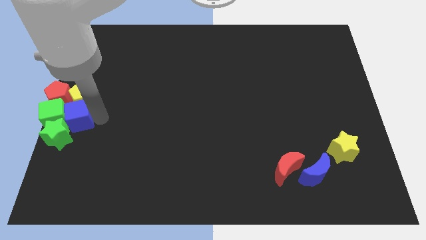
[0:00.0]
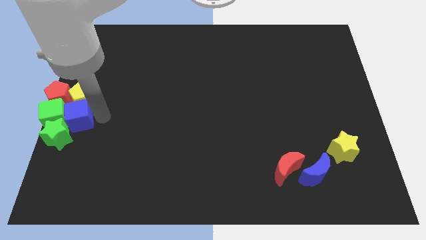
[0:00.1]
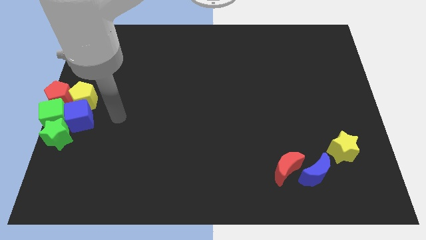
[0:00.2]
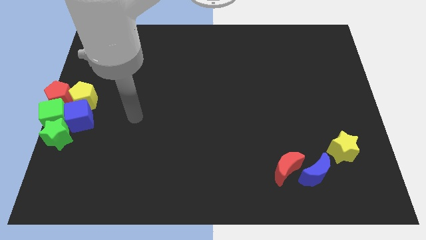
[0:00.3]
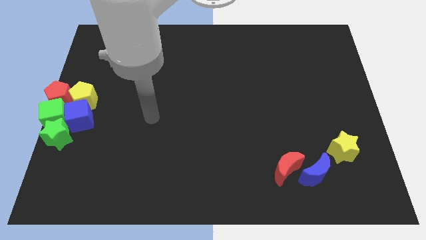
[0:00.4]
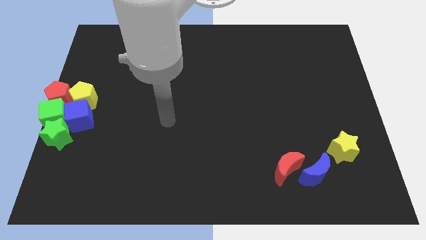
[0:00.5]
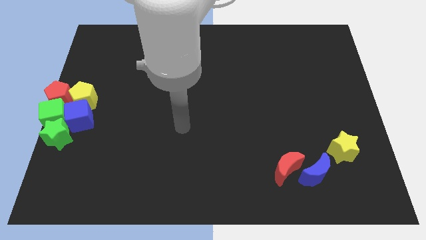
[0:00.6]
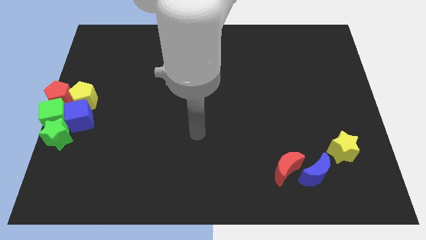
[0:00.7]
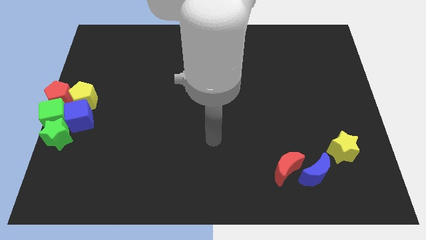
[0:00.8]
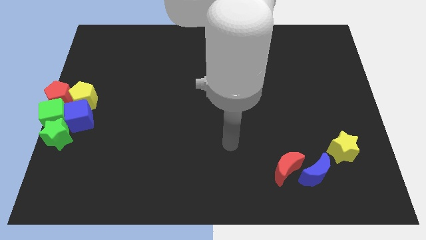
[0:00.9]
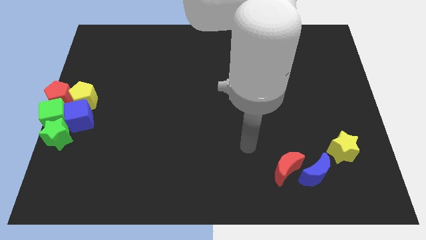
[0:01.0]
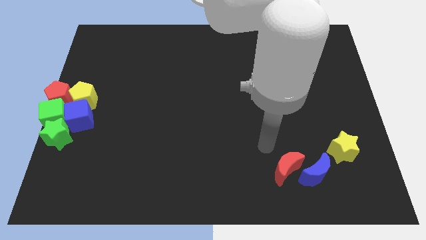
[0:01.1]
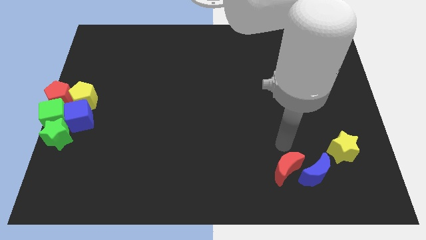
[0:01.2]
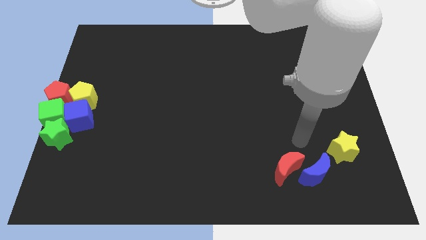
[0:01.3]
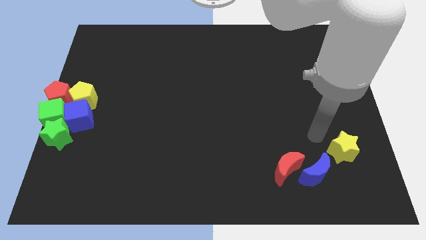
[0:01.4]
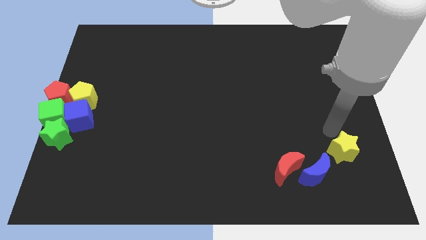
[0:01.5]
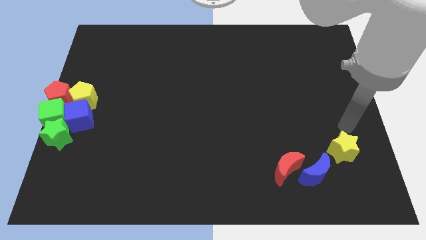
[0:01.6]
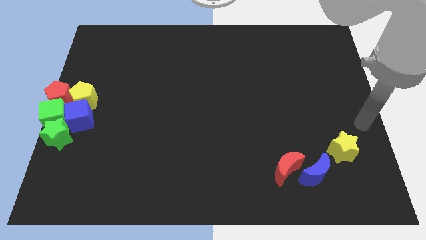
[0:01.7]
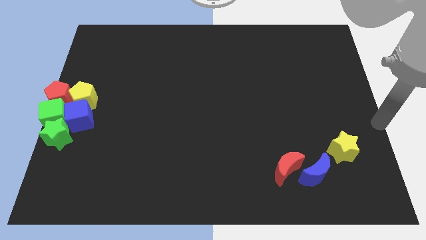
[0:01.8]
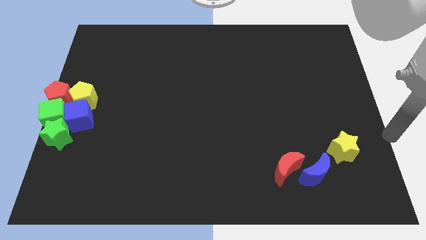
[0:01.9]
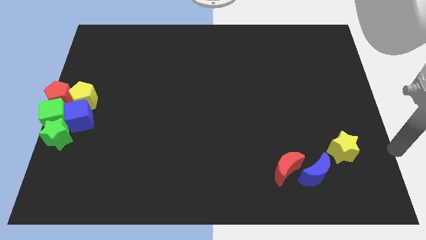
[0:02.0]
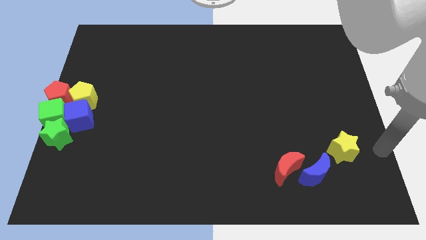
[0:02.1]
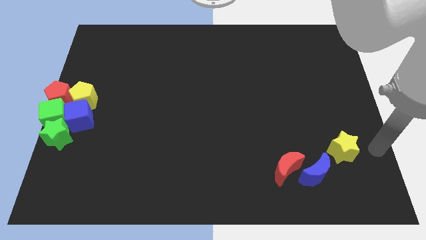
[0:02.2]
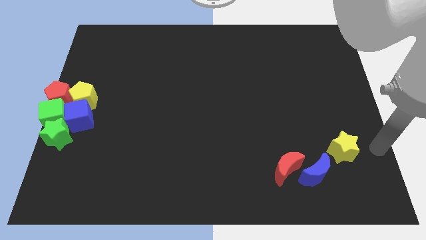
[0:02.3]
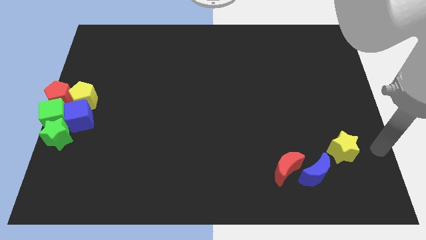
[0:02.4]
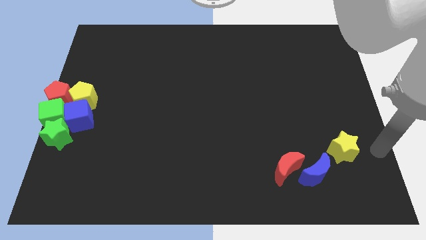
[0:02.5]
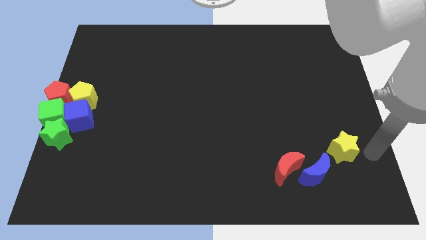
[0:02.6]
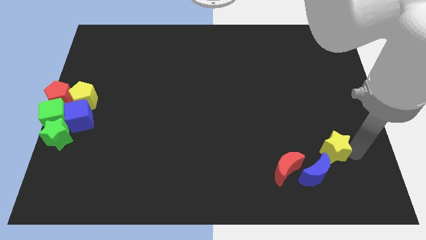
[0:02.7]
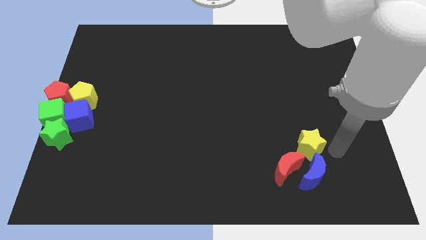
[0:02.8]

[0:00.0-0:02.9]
place yellow star to the top of blue moon

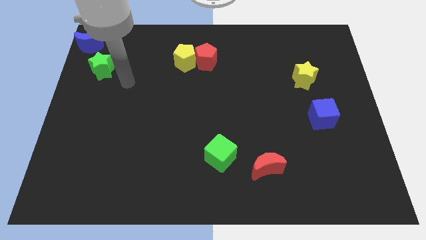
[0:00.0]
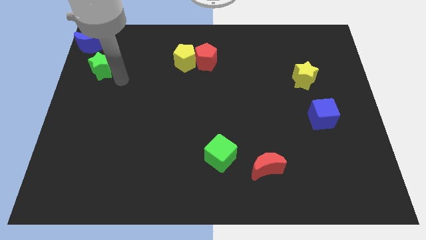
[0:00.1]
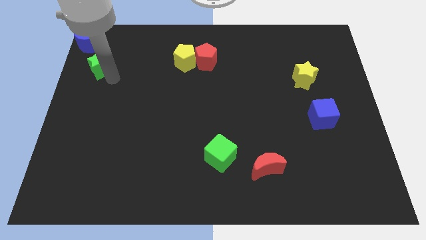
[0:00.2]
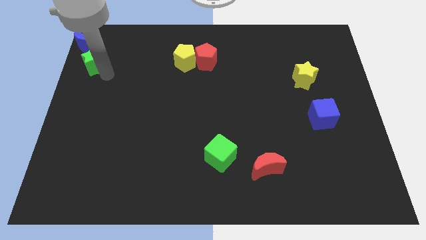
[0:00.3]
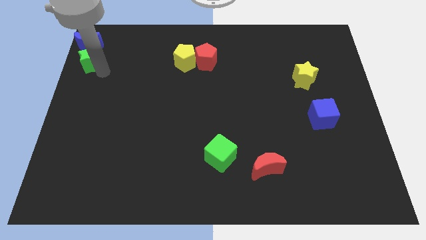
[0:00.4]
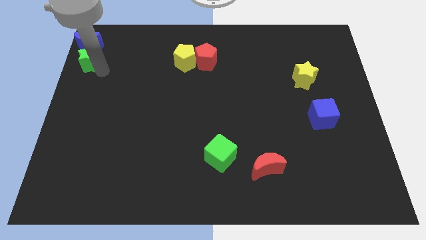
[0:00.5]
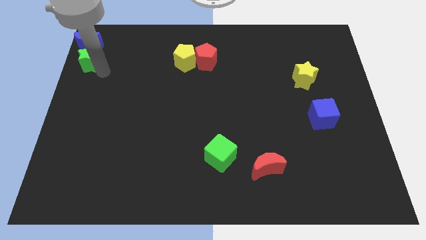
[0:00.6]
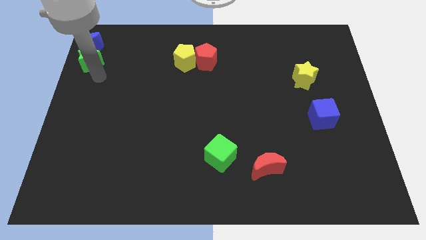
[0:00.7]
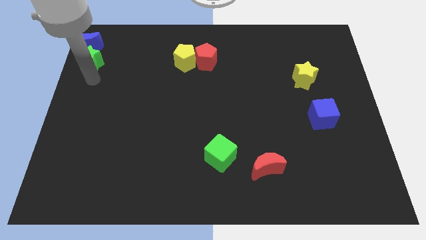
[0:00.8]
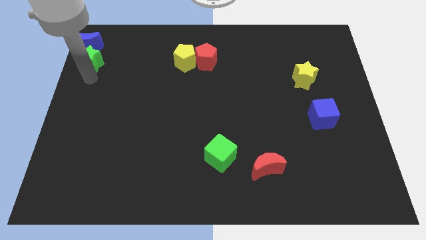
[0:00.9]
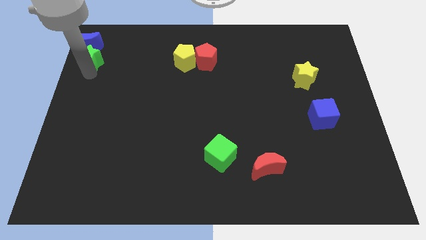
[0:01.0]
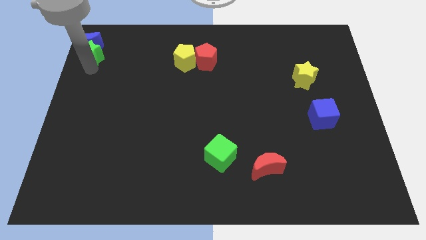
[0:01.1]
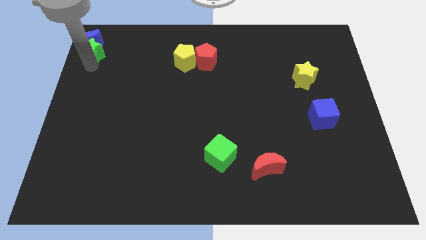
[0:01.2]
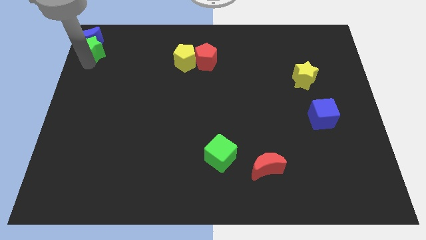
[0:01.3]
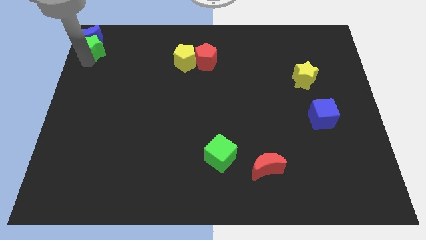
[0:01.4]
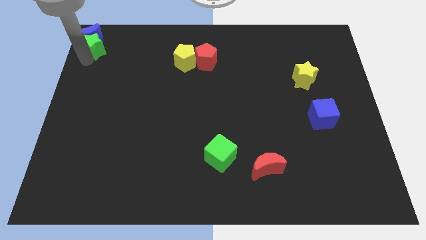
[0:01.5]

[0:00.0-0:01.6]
move the green star to the bottom of the blue crescent

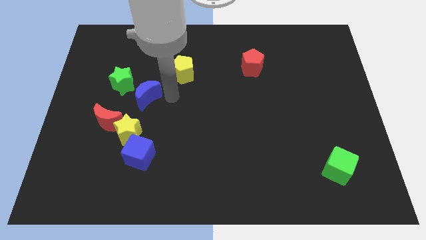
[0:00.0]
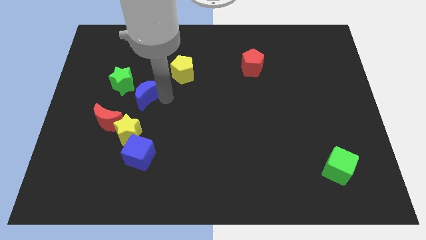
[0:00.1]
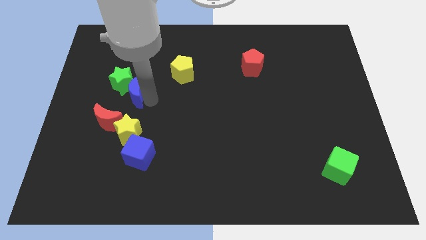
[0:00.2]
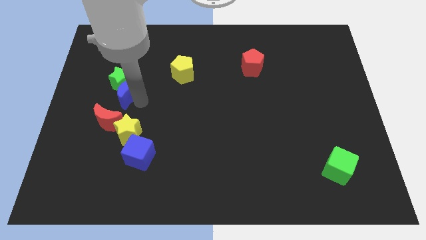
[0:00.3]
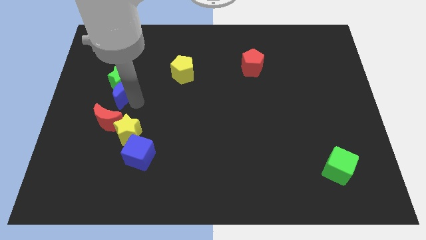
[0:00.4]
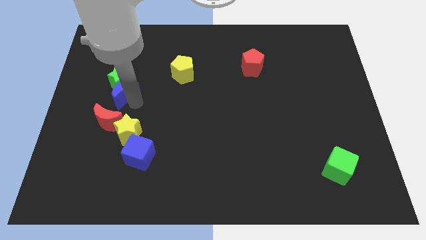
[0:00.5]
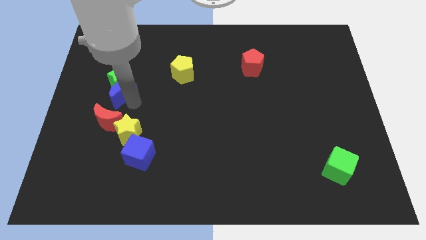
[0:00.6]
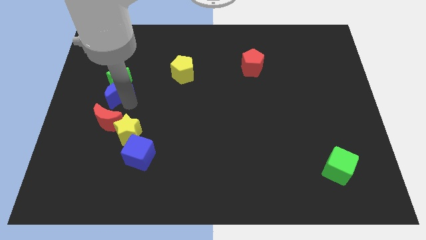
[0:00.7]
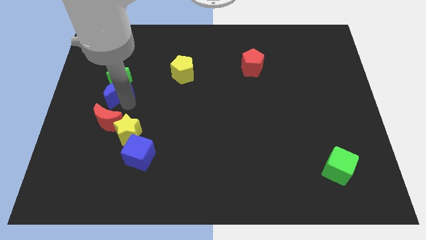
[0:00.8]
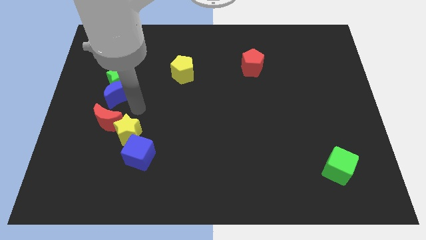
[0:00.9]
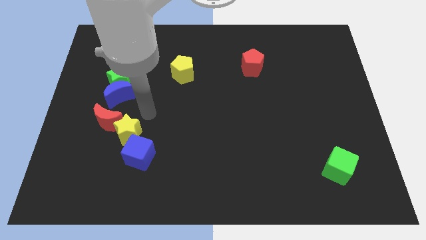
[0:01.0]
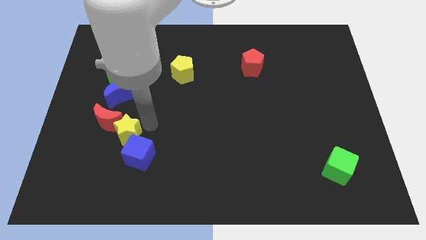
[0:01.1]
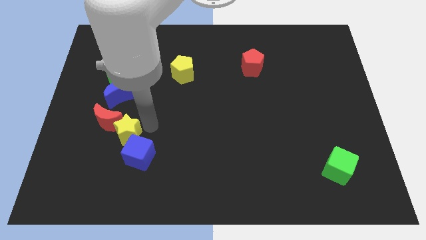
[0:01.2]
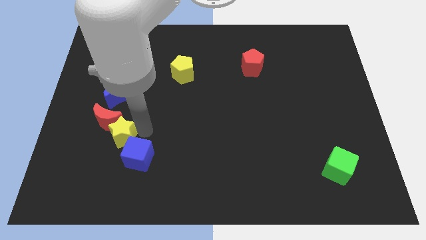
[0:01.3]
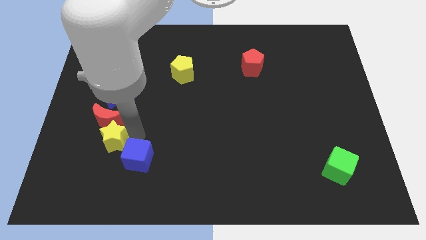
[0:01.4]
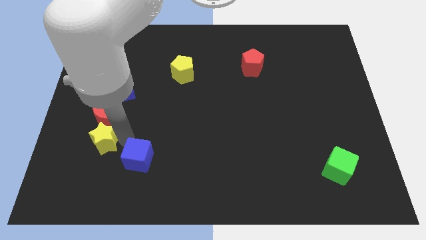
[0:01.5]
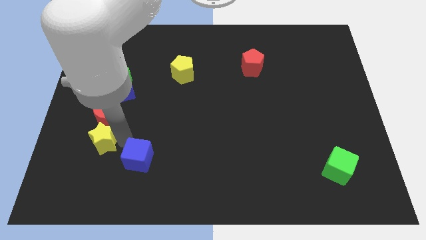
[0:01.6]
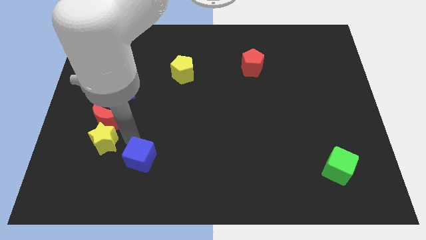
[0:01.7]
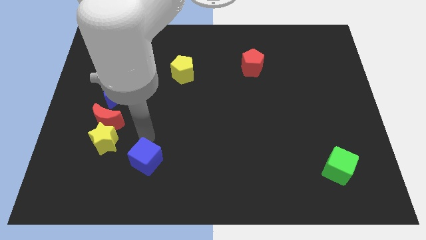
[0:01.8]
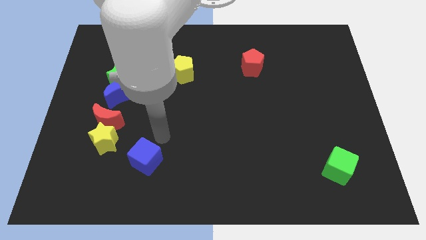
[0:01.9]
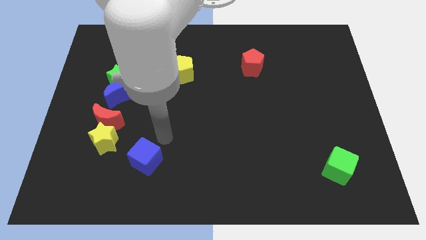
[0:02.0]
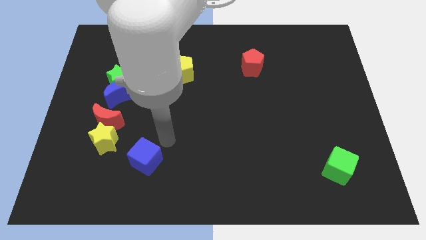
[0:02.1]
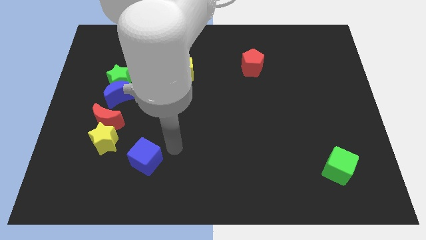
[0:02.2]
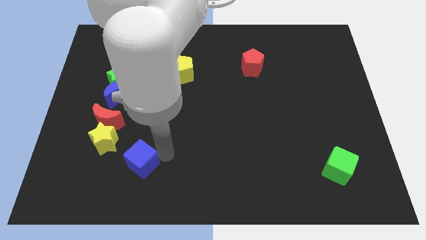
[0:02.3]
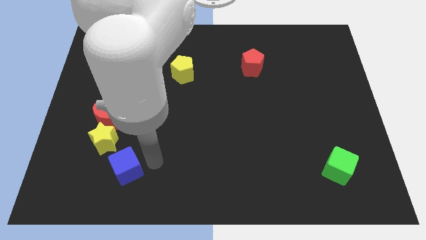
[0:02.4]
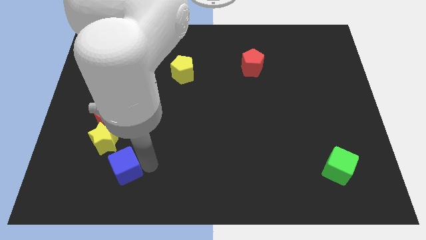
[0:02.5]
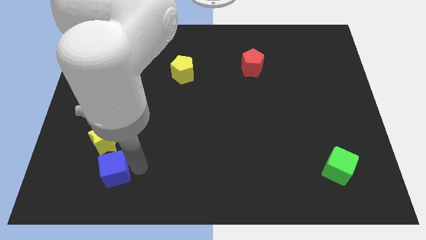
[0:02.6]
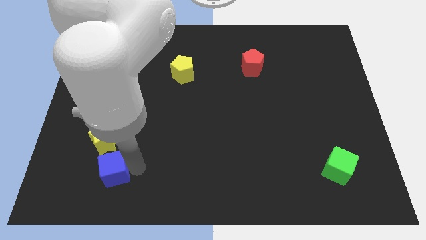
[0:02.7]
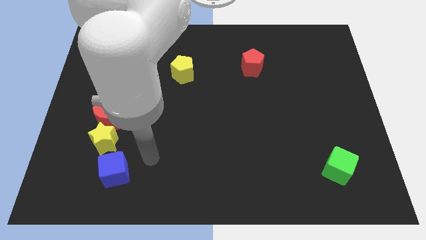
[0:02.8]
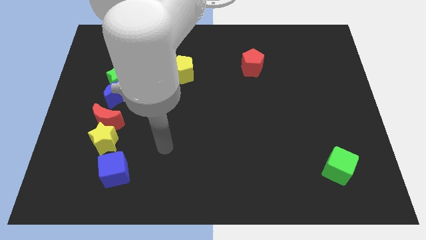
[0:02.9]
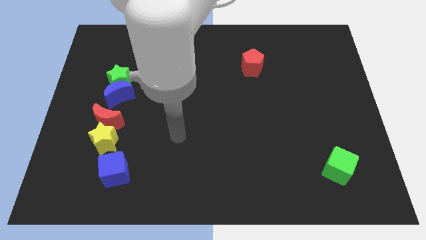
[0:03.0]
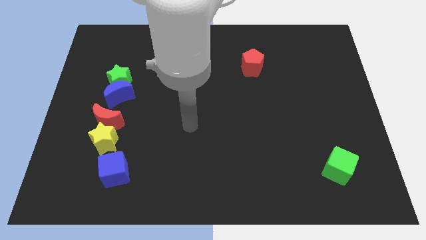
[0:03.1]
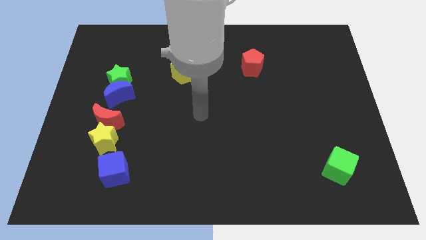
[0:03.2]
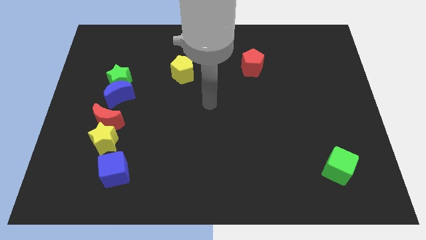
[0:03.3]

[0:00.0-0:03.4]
adjust the blue crescent yellow star and the blue cube to form a vertical line

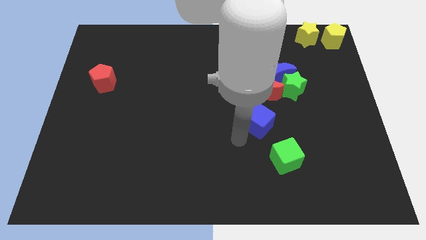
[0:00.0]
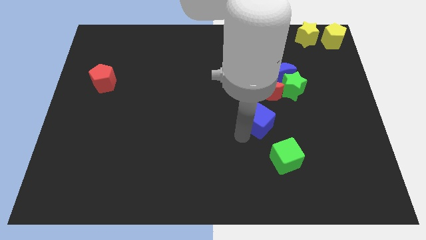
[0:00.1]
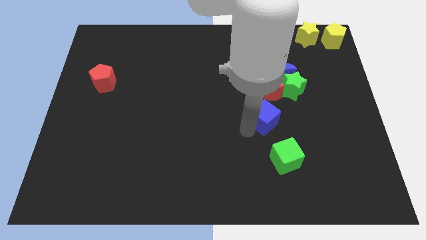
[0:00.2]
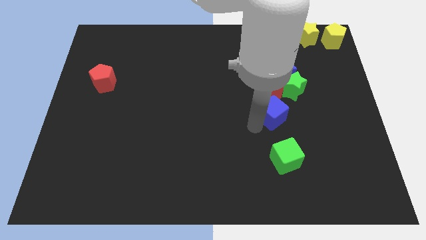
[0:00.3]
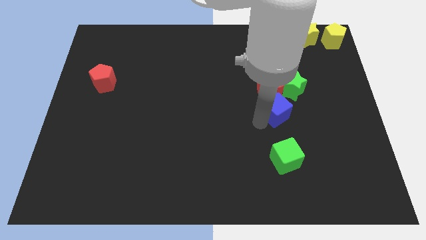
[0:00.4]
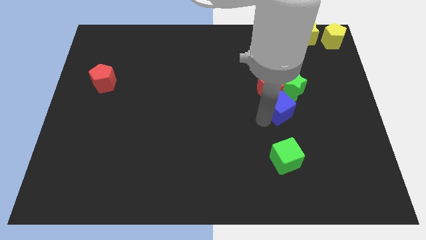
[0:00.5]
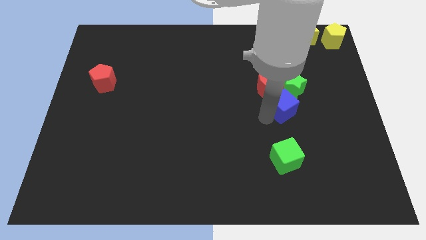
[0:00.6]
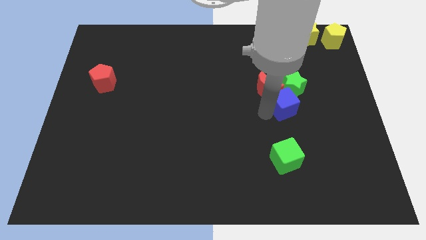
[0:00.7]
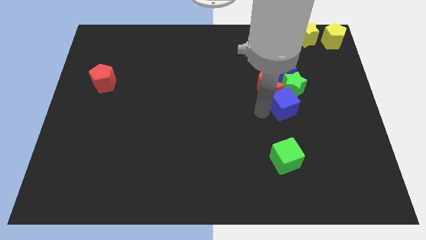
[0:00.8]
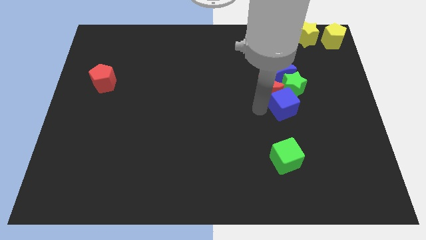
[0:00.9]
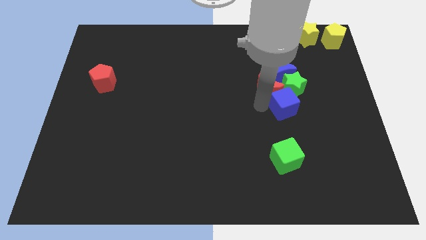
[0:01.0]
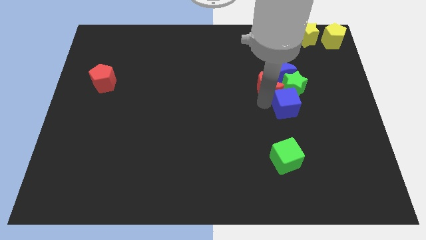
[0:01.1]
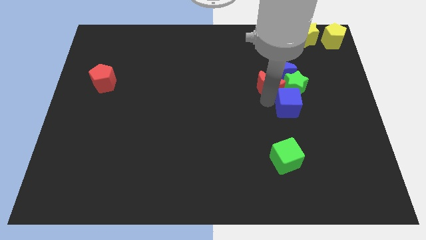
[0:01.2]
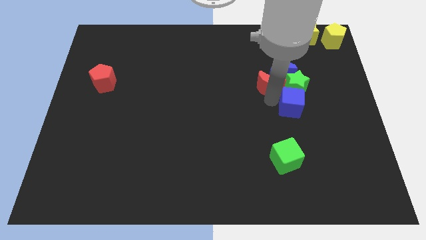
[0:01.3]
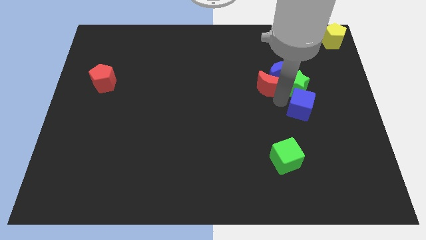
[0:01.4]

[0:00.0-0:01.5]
push the blue cube to the bottom side of the green star
